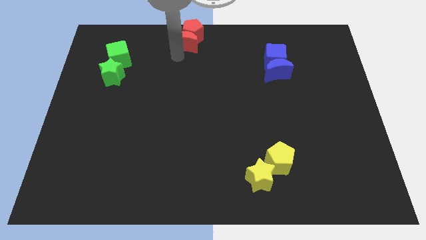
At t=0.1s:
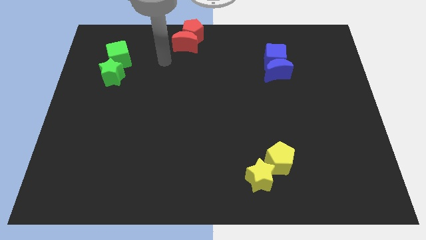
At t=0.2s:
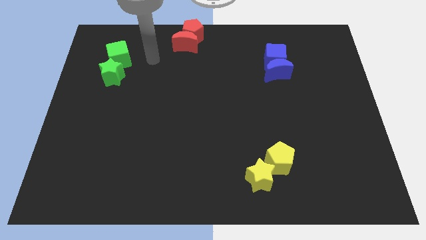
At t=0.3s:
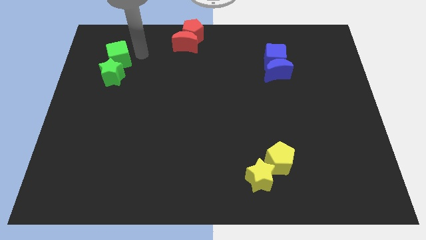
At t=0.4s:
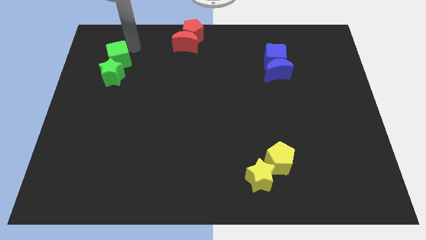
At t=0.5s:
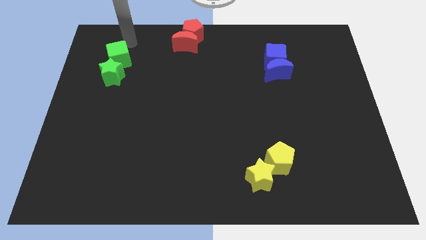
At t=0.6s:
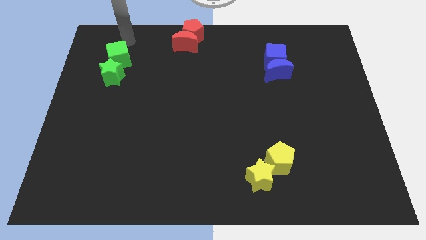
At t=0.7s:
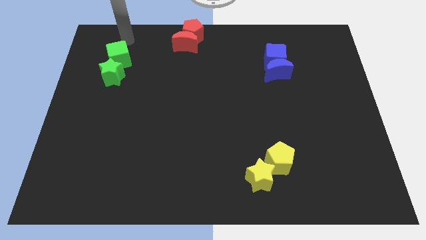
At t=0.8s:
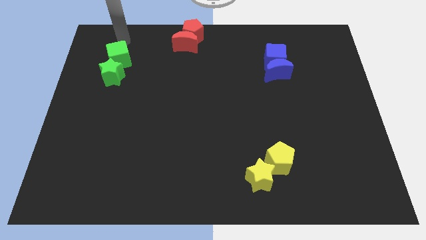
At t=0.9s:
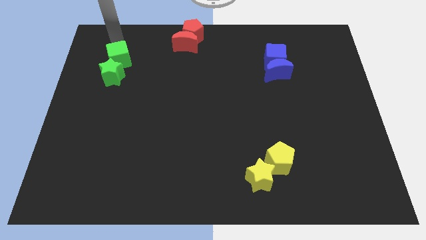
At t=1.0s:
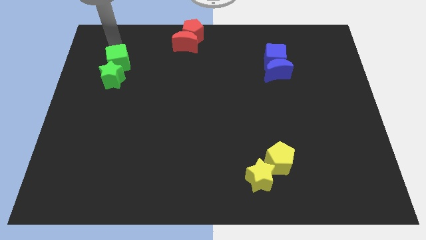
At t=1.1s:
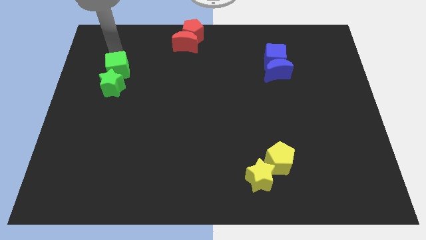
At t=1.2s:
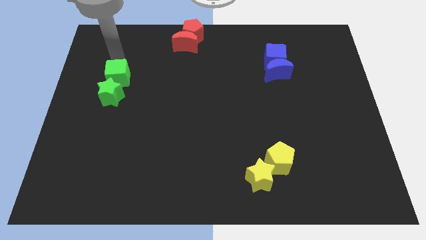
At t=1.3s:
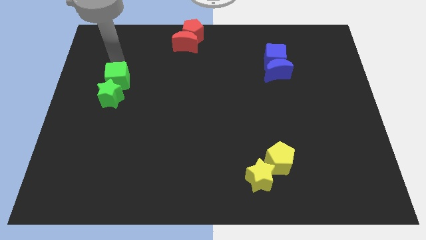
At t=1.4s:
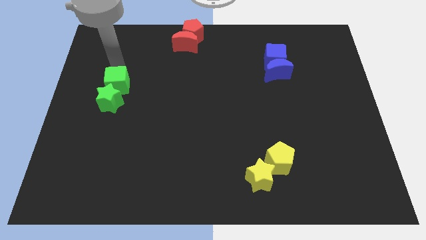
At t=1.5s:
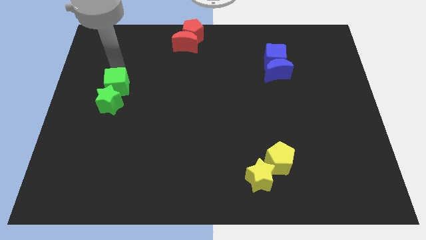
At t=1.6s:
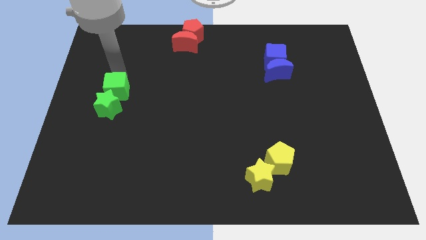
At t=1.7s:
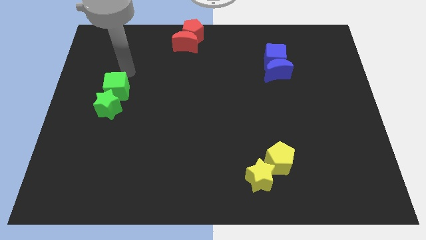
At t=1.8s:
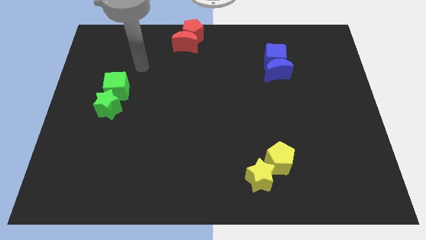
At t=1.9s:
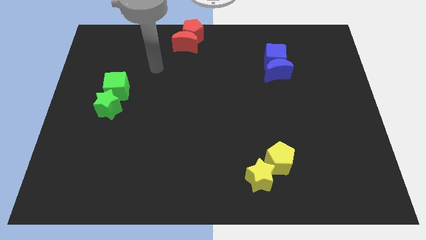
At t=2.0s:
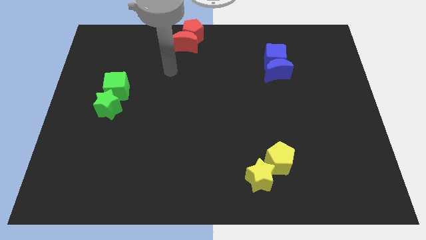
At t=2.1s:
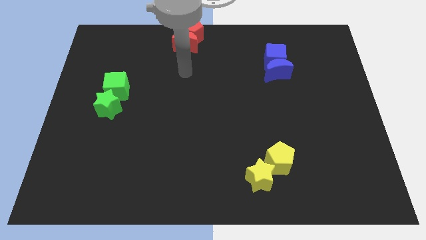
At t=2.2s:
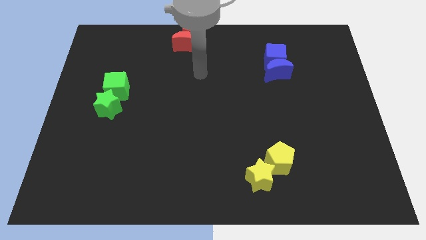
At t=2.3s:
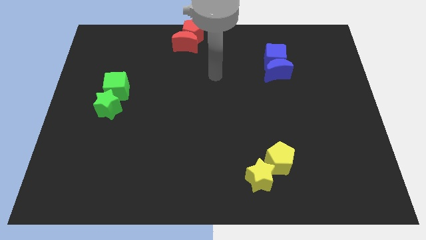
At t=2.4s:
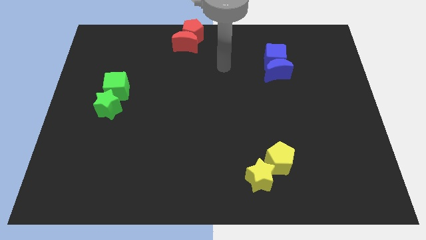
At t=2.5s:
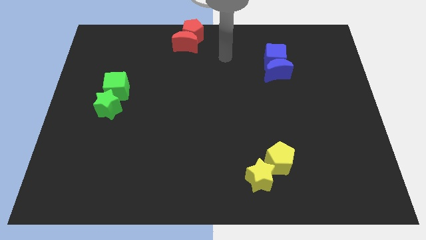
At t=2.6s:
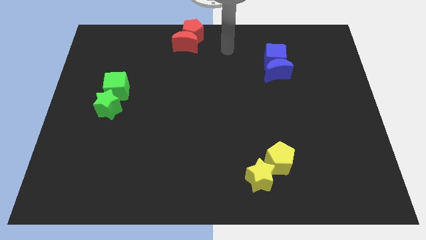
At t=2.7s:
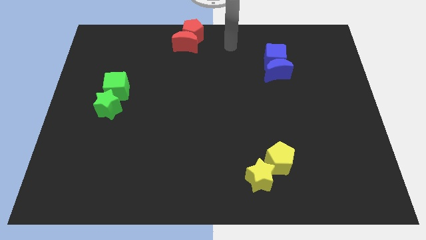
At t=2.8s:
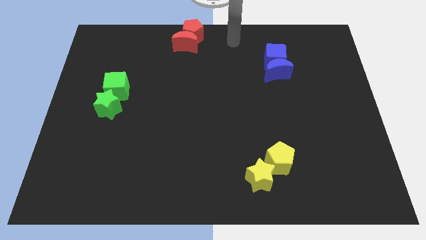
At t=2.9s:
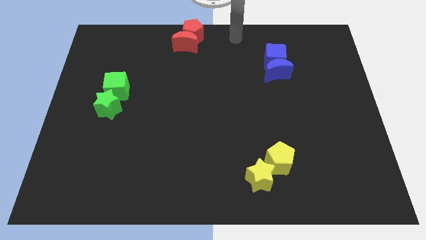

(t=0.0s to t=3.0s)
push the green cube to the left center along with the green star

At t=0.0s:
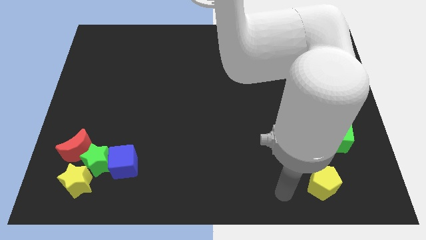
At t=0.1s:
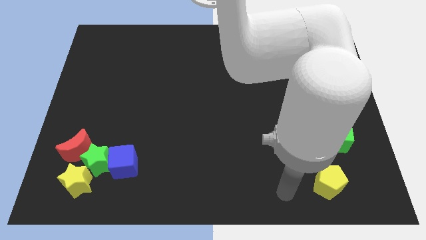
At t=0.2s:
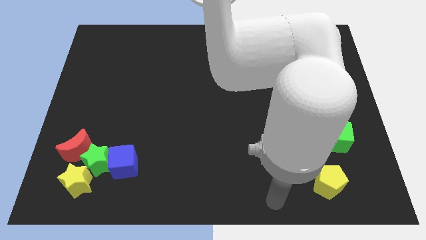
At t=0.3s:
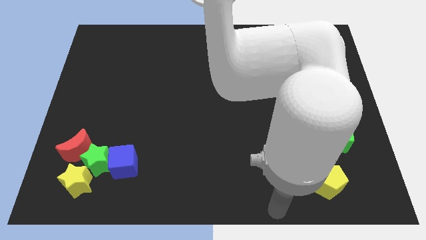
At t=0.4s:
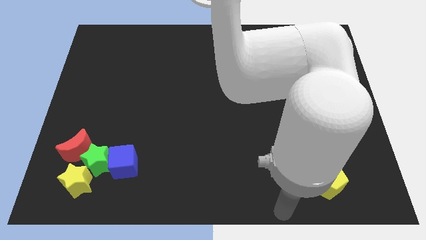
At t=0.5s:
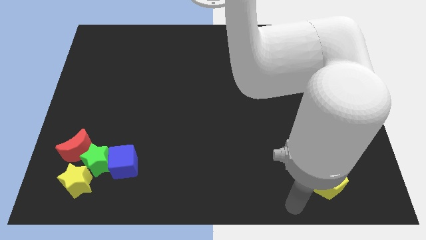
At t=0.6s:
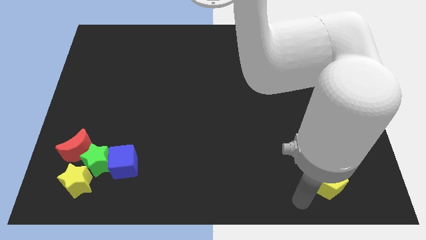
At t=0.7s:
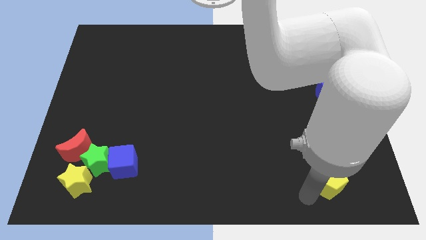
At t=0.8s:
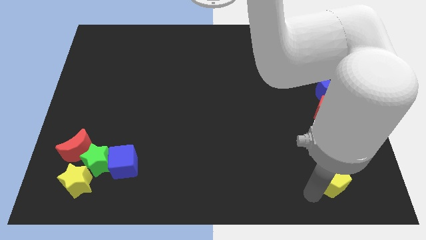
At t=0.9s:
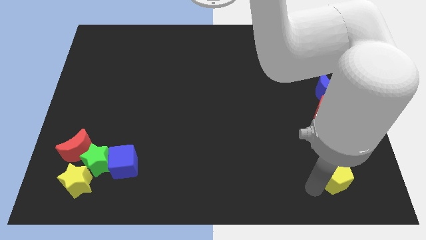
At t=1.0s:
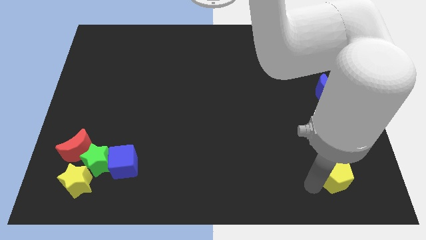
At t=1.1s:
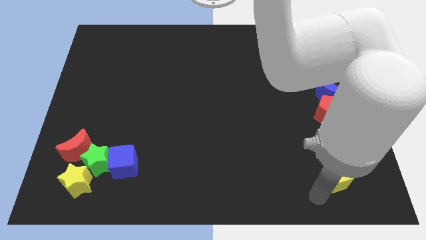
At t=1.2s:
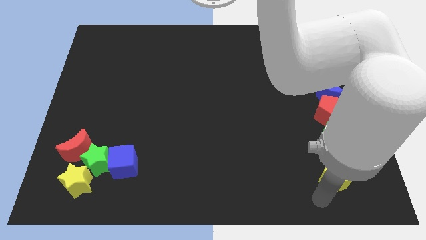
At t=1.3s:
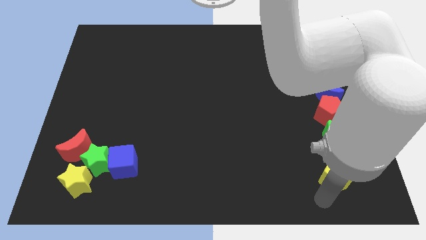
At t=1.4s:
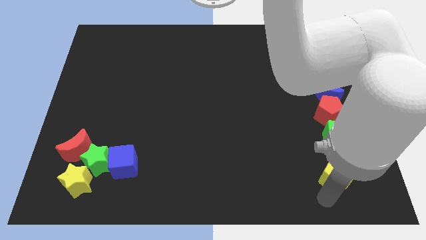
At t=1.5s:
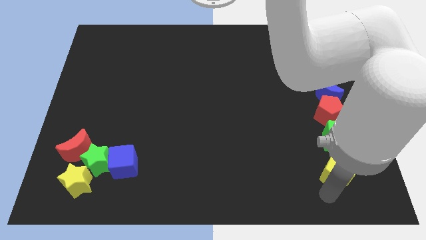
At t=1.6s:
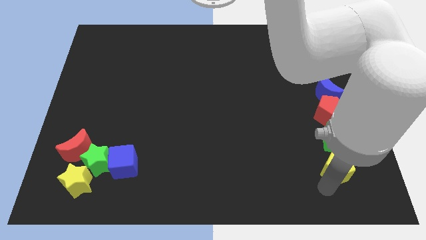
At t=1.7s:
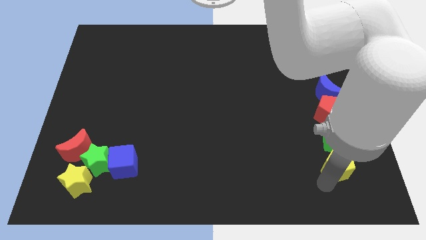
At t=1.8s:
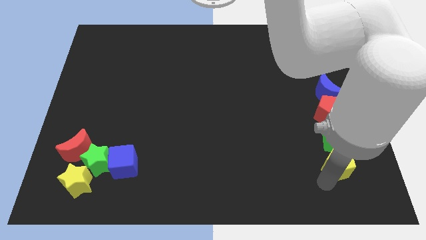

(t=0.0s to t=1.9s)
place the yellow pentagon vertically below the green cube

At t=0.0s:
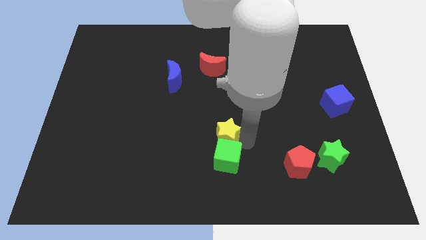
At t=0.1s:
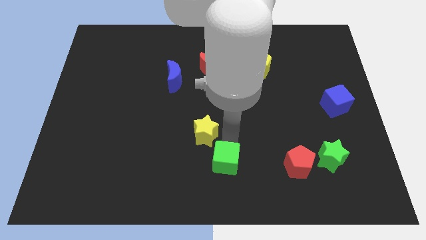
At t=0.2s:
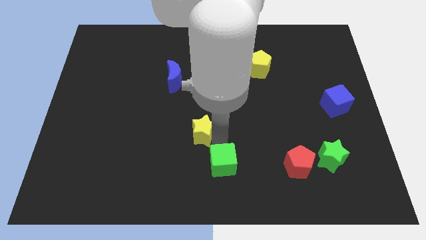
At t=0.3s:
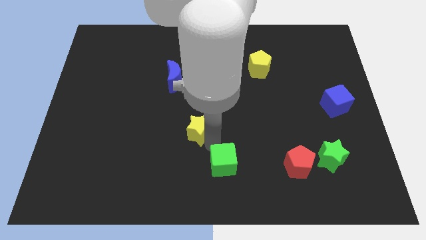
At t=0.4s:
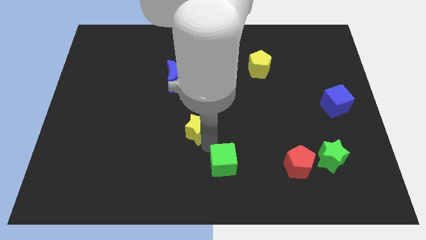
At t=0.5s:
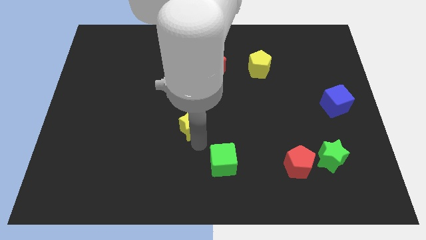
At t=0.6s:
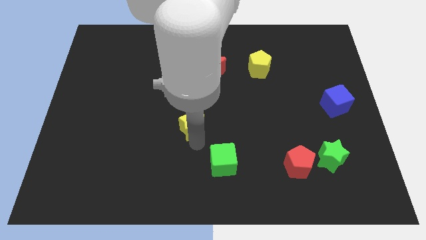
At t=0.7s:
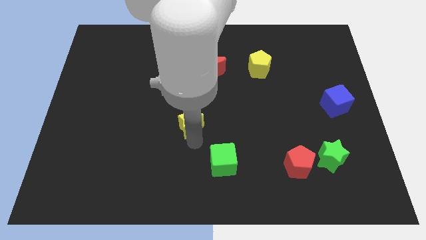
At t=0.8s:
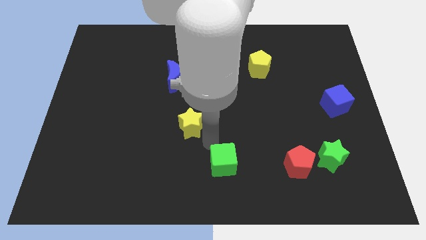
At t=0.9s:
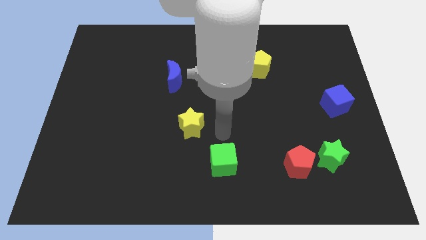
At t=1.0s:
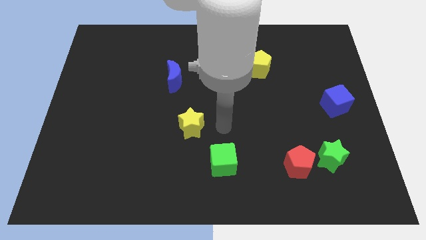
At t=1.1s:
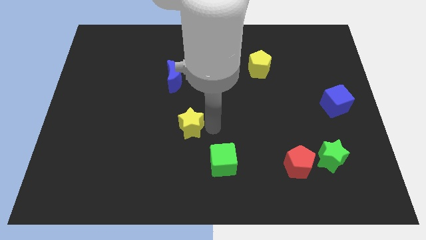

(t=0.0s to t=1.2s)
move the yellow star slightly to the left

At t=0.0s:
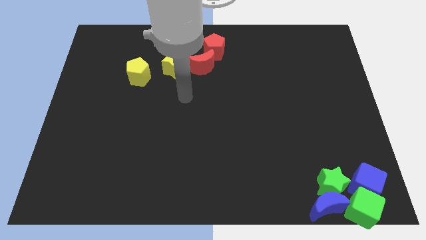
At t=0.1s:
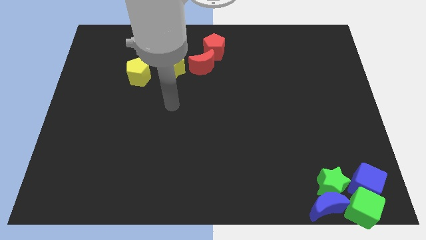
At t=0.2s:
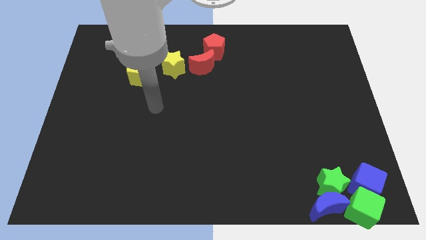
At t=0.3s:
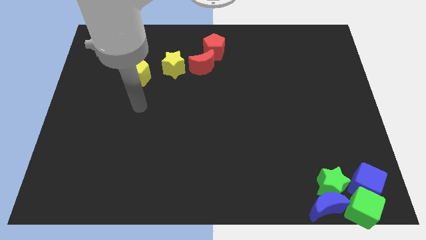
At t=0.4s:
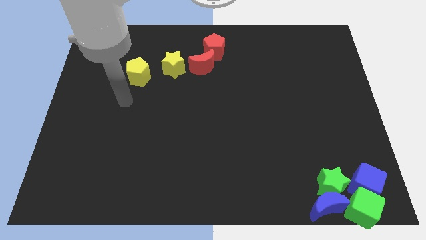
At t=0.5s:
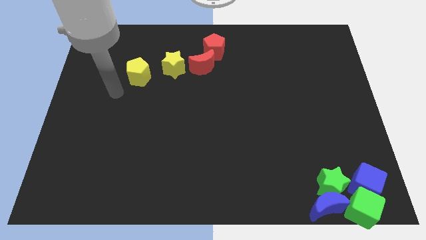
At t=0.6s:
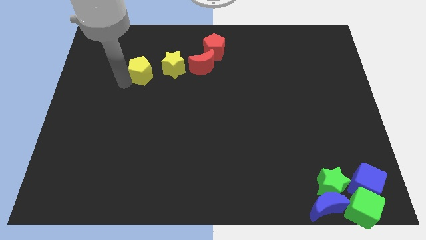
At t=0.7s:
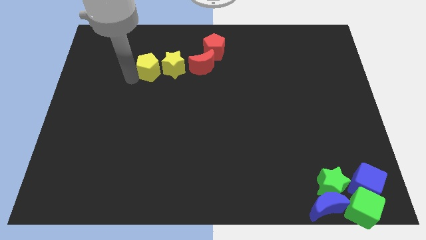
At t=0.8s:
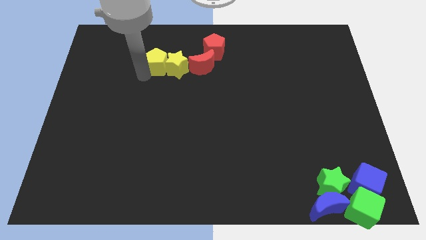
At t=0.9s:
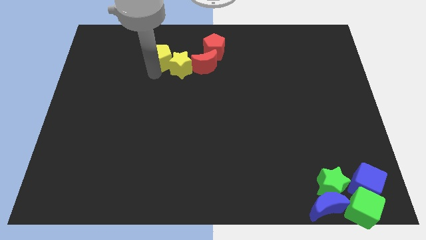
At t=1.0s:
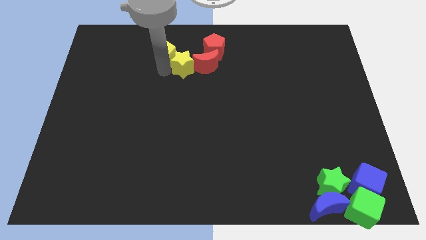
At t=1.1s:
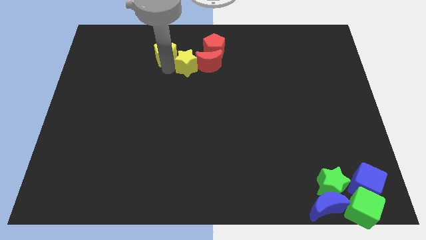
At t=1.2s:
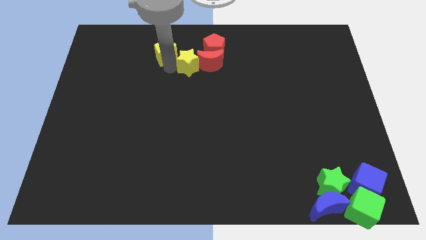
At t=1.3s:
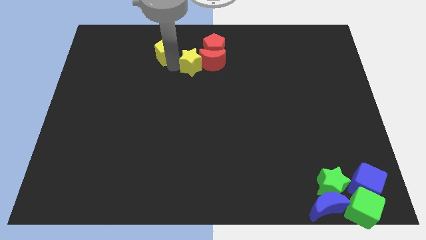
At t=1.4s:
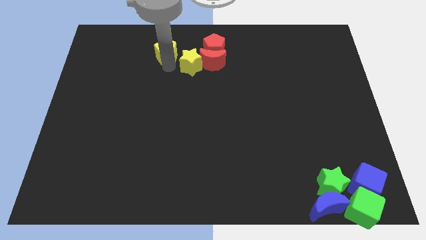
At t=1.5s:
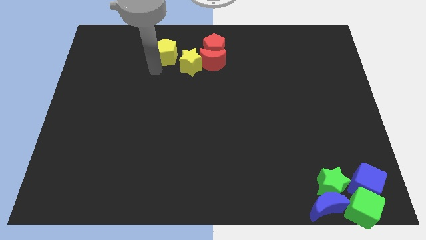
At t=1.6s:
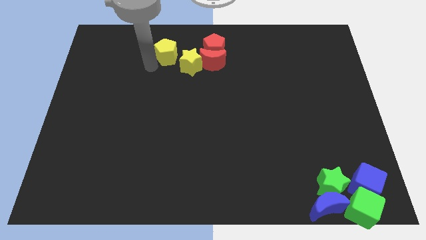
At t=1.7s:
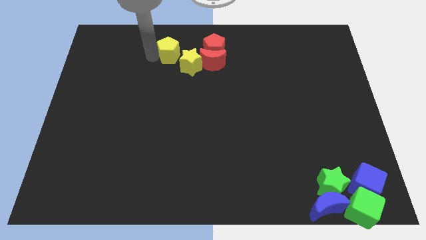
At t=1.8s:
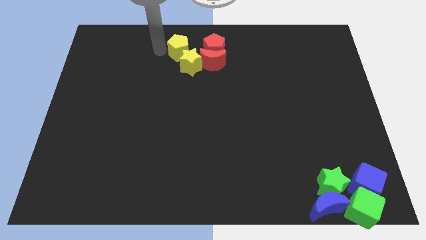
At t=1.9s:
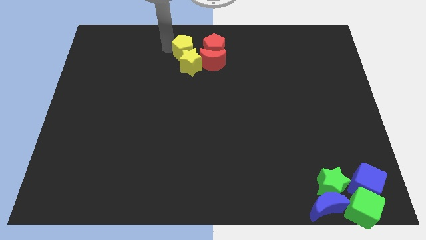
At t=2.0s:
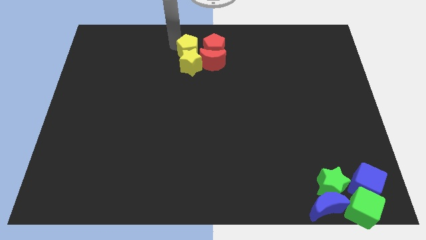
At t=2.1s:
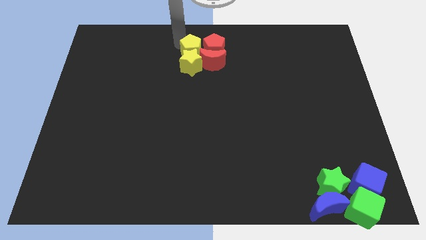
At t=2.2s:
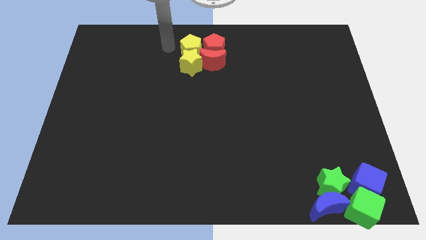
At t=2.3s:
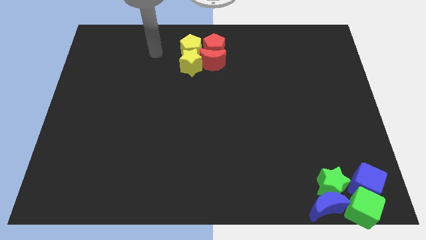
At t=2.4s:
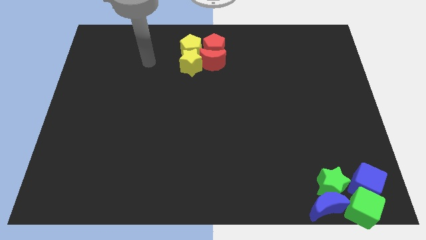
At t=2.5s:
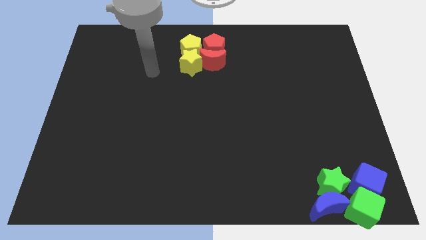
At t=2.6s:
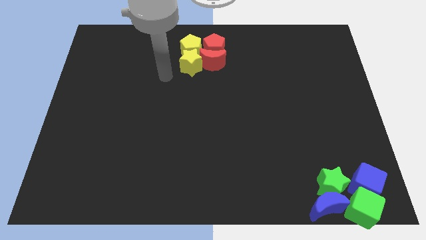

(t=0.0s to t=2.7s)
push the yellow pentagon to the left side of the red pentagon
